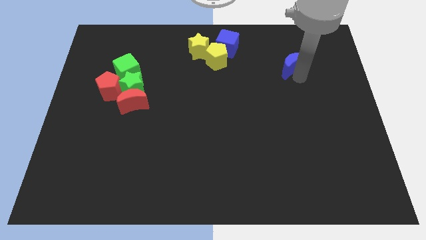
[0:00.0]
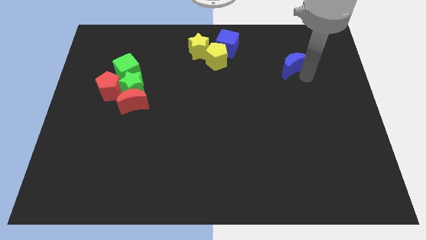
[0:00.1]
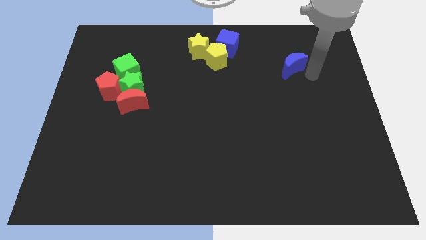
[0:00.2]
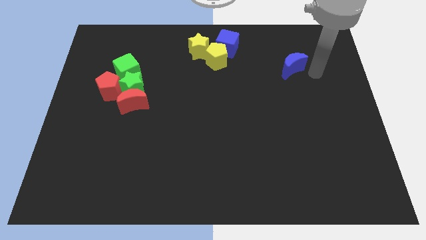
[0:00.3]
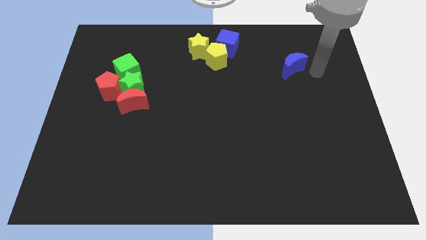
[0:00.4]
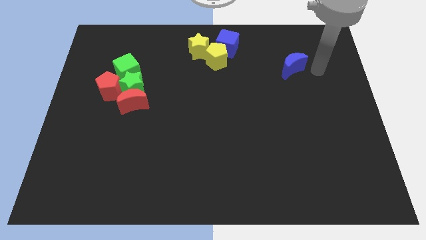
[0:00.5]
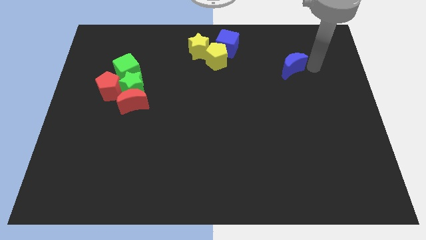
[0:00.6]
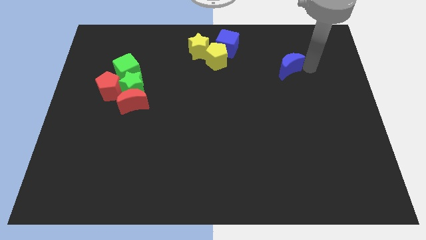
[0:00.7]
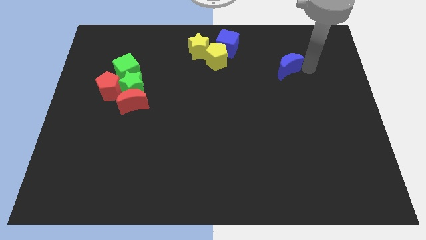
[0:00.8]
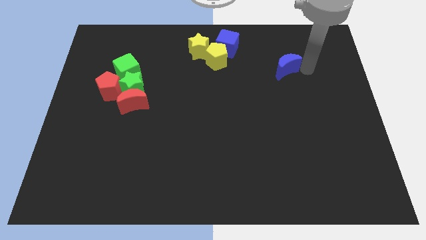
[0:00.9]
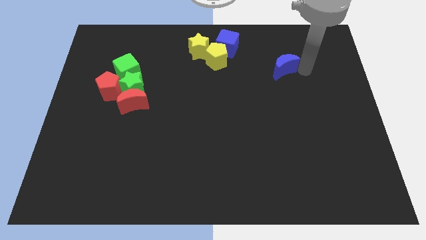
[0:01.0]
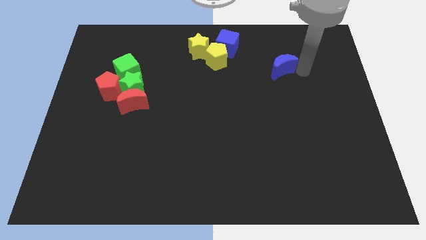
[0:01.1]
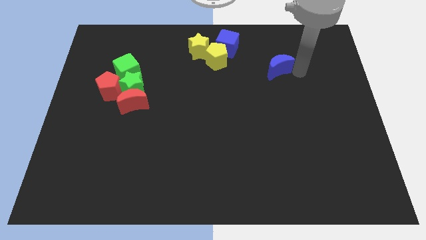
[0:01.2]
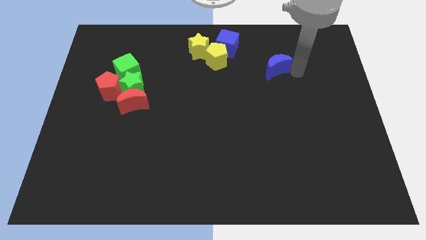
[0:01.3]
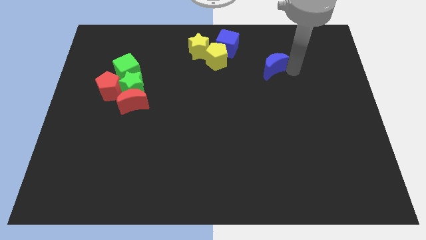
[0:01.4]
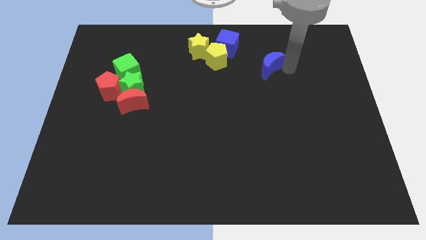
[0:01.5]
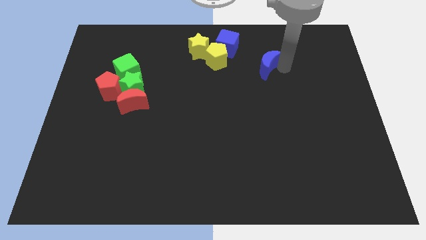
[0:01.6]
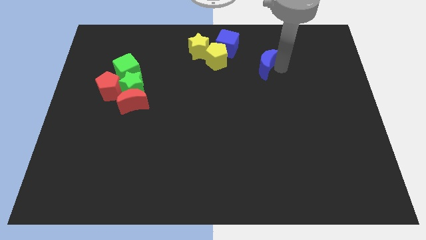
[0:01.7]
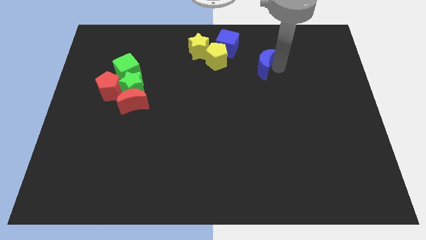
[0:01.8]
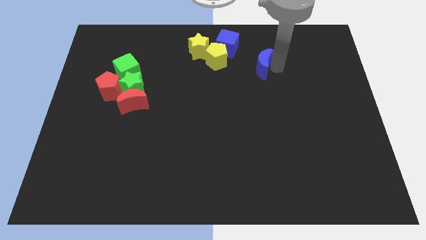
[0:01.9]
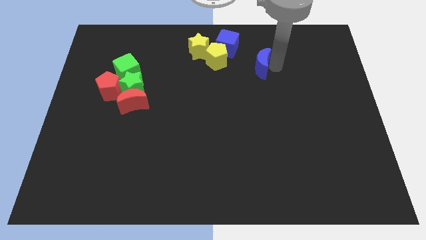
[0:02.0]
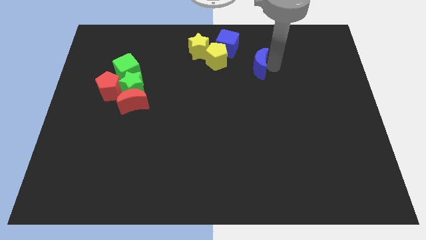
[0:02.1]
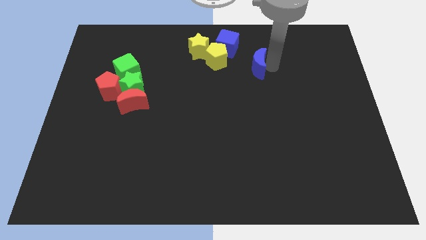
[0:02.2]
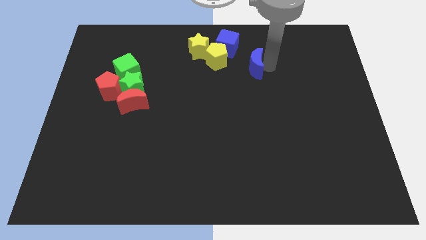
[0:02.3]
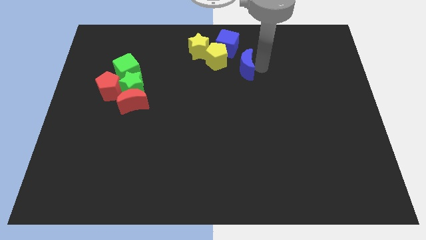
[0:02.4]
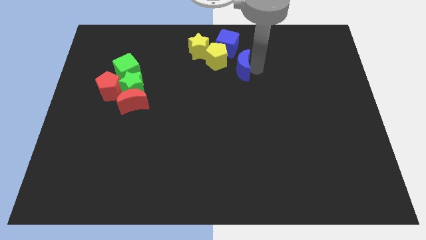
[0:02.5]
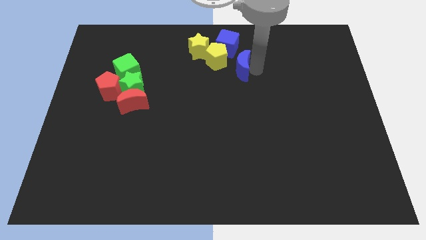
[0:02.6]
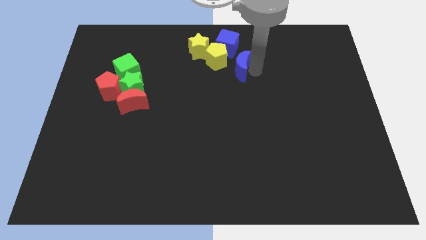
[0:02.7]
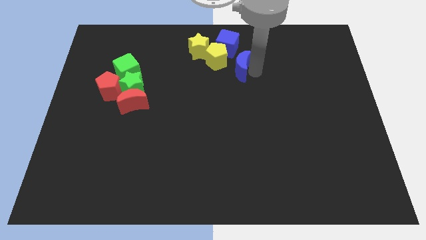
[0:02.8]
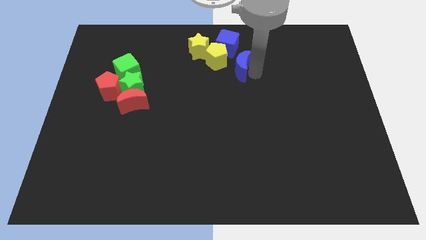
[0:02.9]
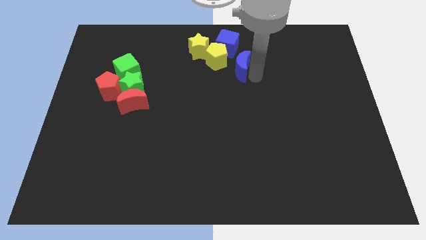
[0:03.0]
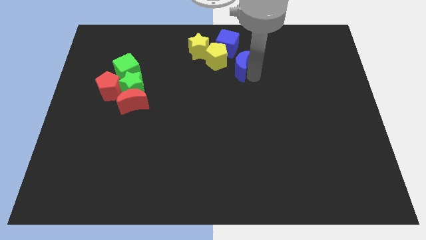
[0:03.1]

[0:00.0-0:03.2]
place the blue moon right to the yellow pentagon

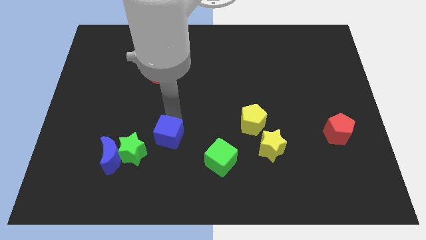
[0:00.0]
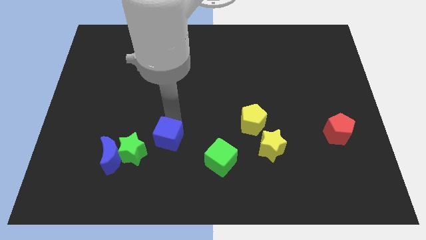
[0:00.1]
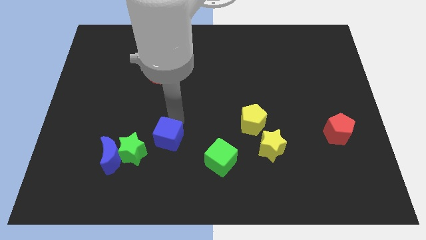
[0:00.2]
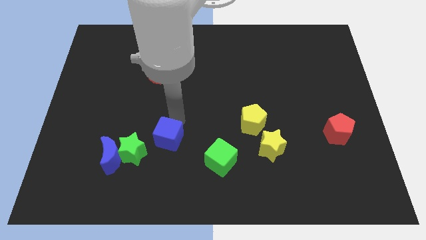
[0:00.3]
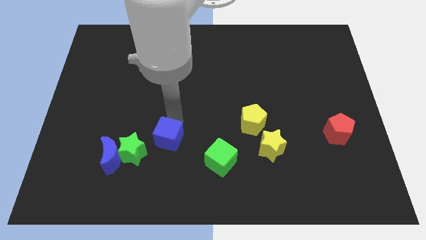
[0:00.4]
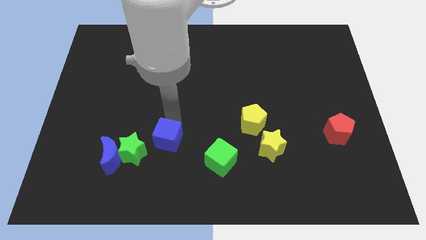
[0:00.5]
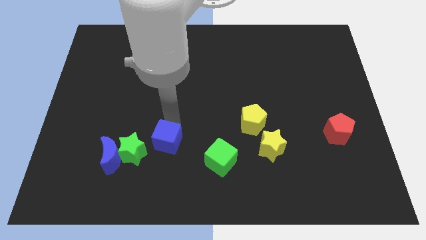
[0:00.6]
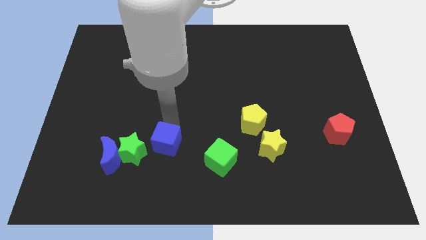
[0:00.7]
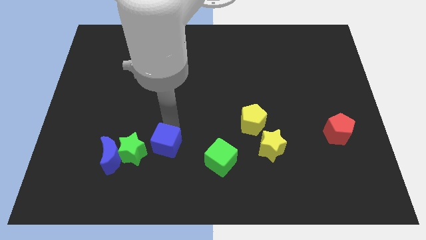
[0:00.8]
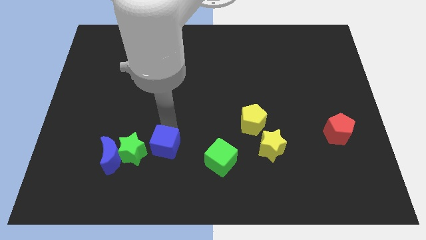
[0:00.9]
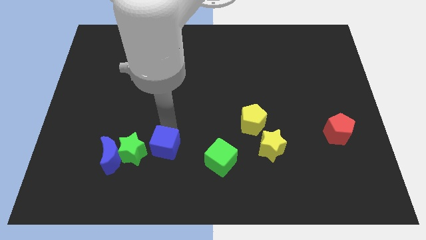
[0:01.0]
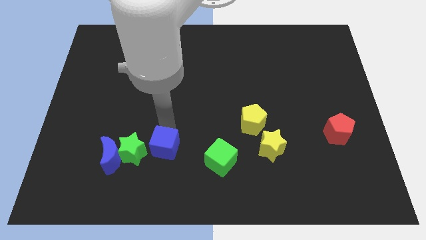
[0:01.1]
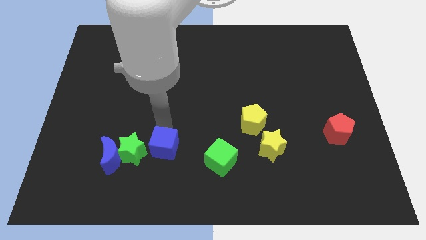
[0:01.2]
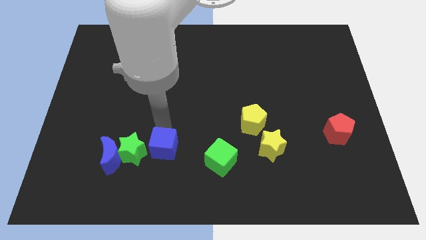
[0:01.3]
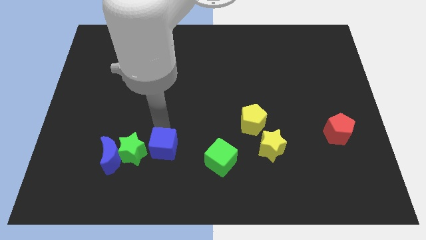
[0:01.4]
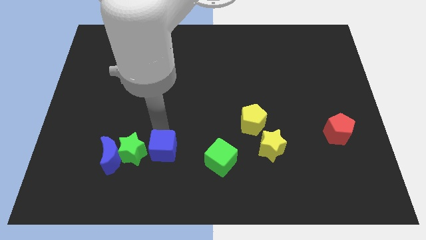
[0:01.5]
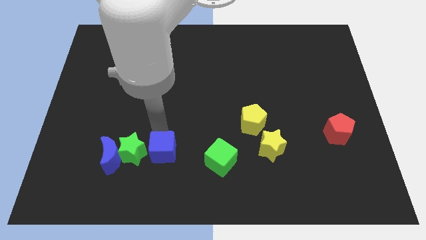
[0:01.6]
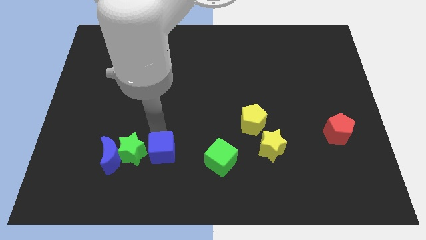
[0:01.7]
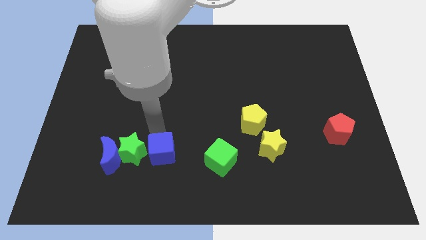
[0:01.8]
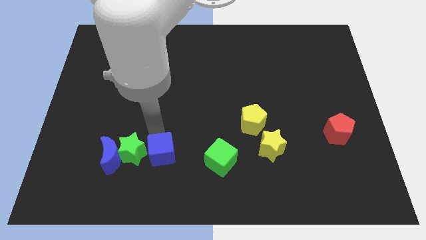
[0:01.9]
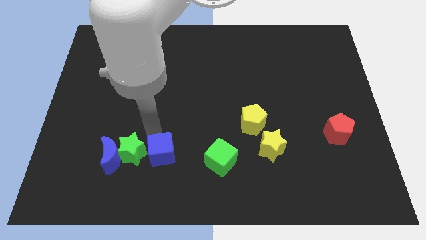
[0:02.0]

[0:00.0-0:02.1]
push the blue cube right to the green star

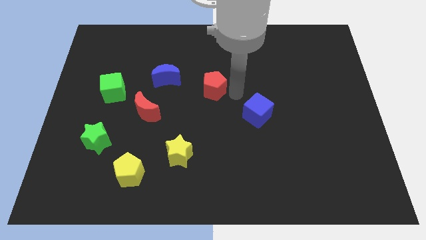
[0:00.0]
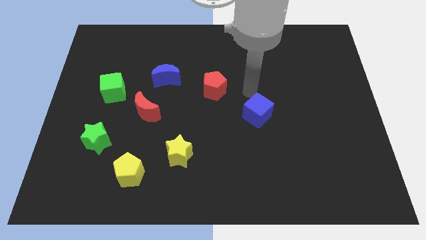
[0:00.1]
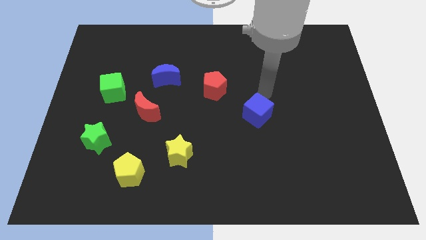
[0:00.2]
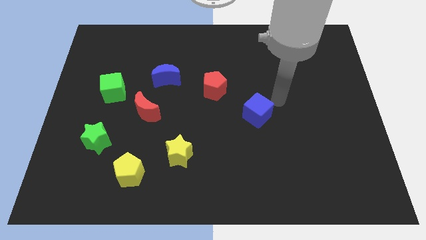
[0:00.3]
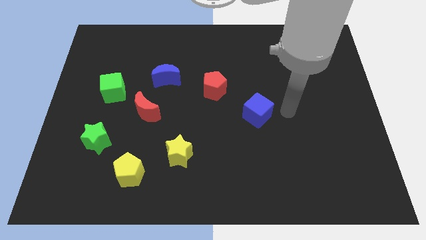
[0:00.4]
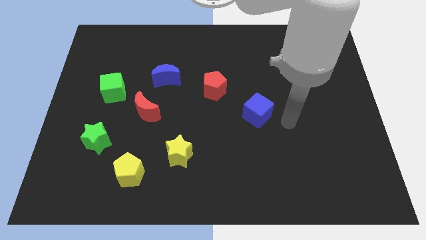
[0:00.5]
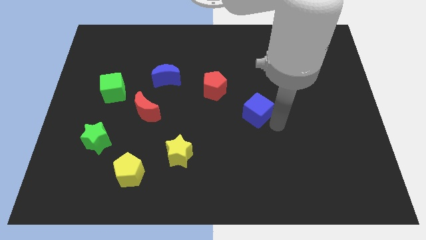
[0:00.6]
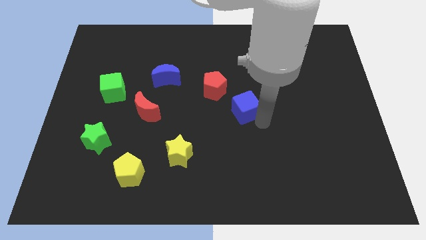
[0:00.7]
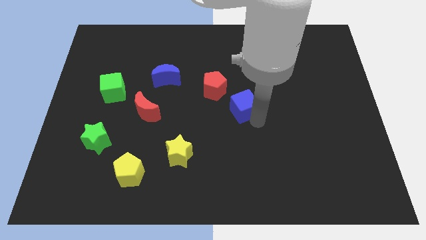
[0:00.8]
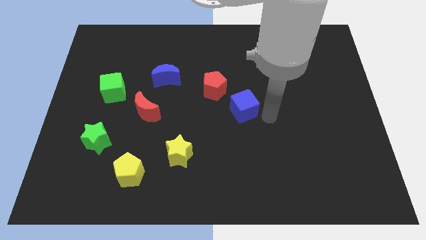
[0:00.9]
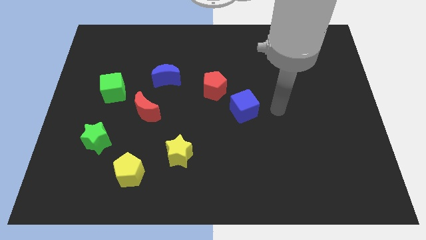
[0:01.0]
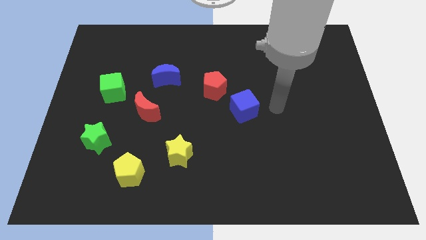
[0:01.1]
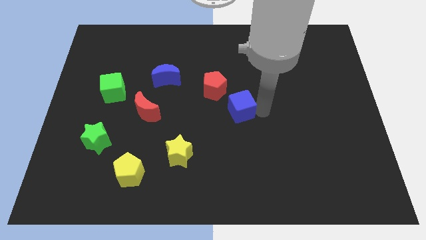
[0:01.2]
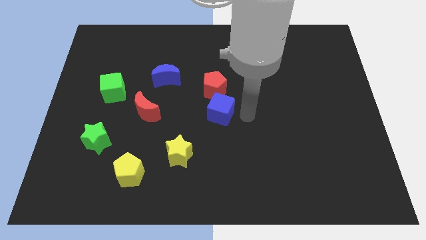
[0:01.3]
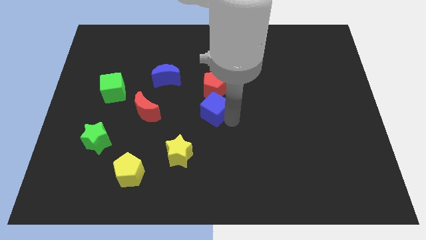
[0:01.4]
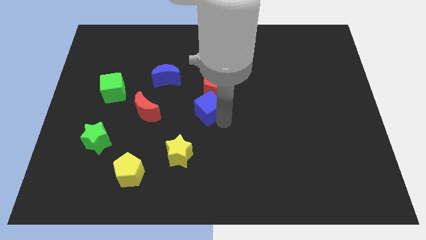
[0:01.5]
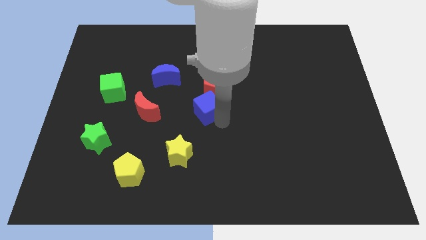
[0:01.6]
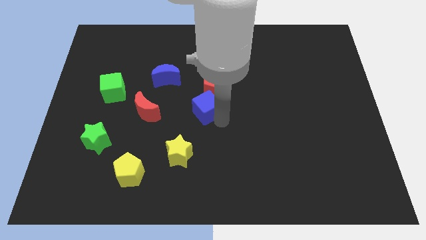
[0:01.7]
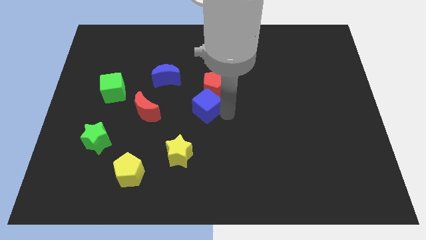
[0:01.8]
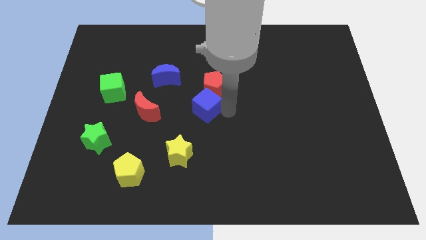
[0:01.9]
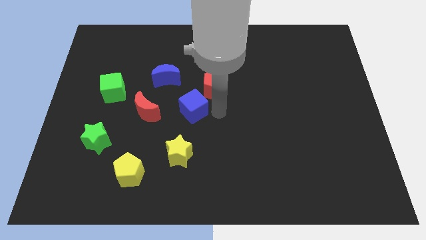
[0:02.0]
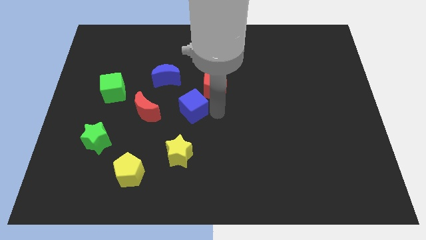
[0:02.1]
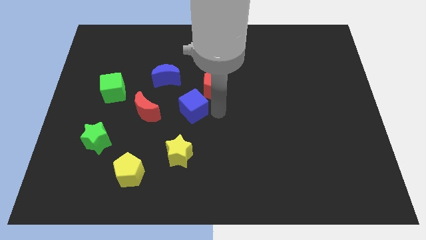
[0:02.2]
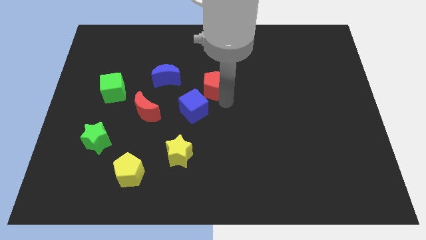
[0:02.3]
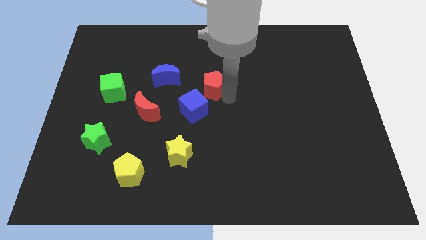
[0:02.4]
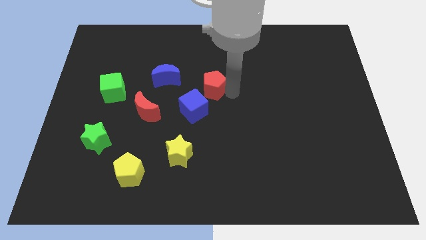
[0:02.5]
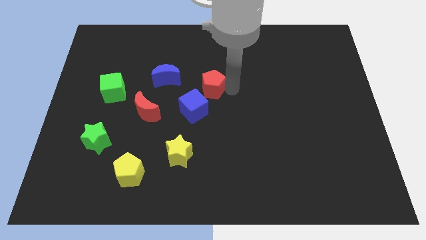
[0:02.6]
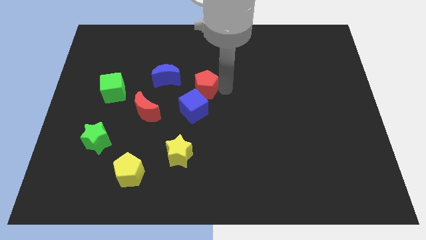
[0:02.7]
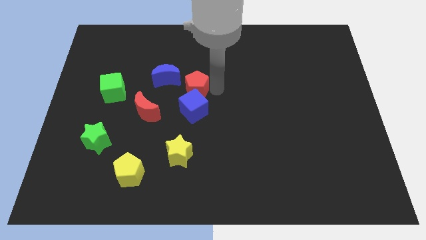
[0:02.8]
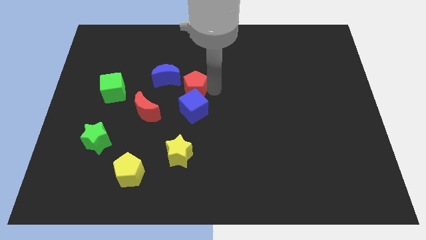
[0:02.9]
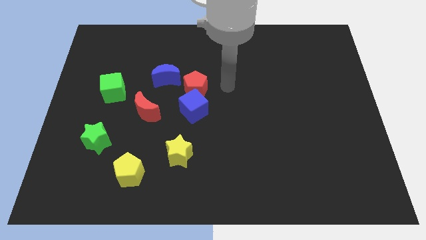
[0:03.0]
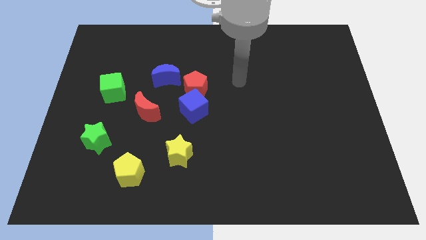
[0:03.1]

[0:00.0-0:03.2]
push the blue cube into the red pentagon

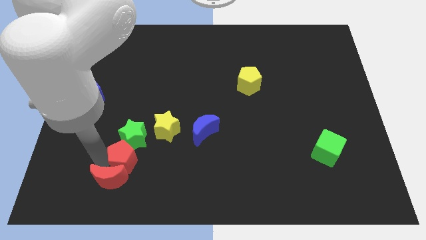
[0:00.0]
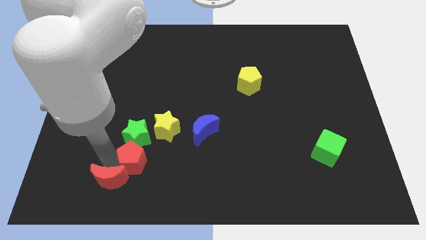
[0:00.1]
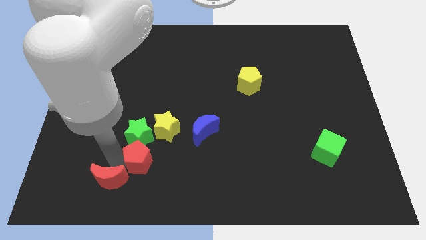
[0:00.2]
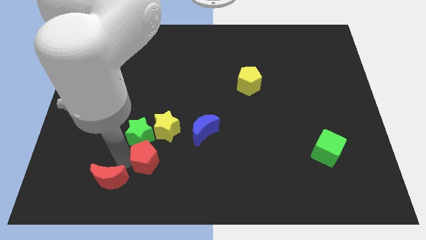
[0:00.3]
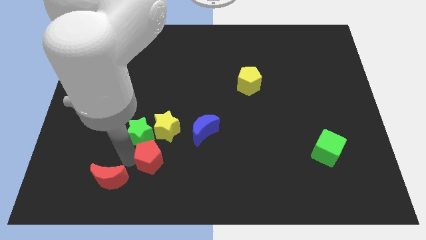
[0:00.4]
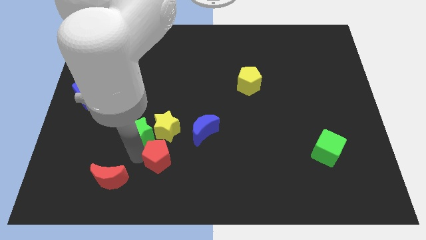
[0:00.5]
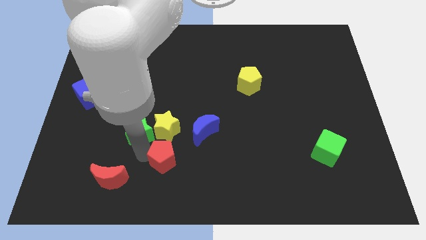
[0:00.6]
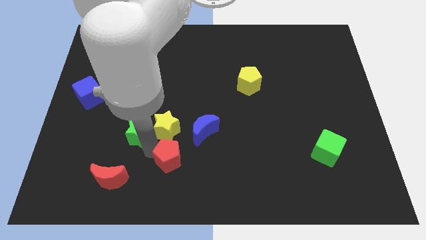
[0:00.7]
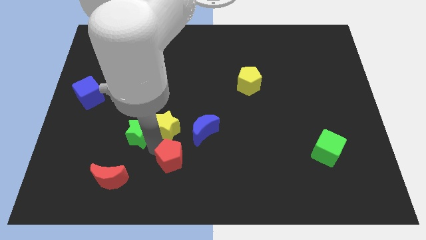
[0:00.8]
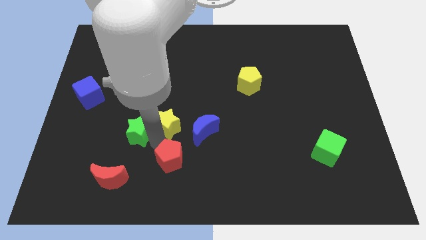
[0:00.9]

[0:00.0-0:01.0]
move the red pentagon to the bottom of the yellow star
